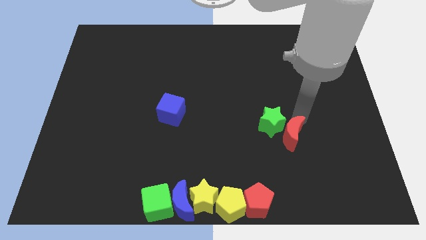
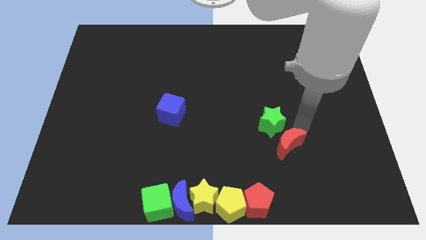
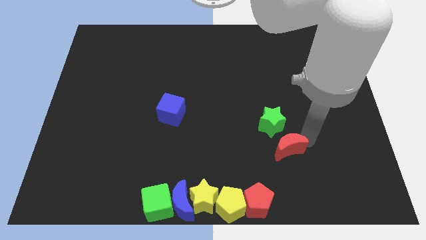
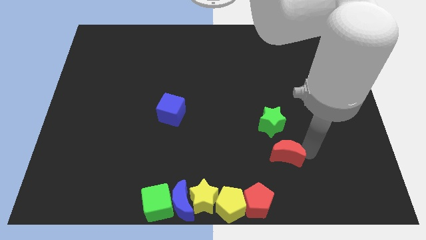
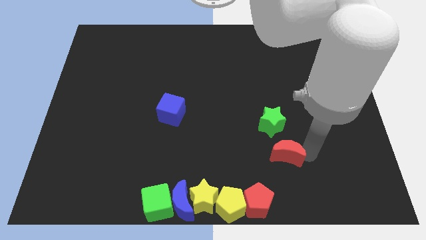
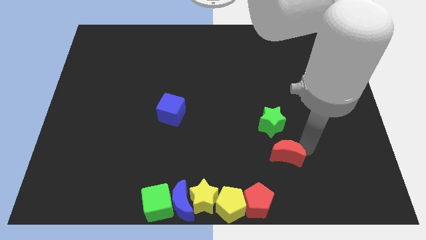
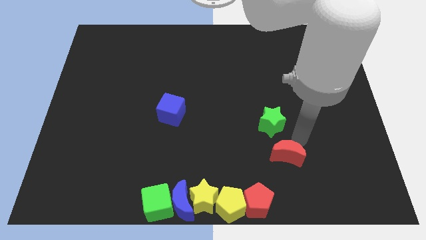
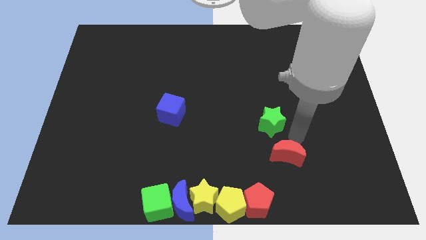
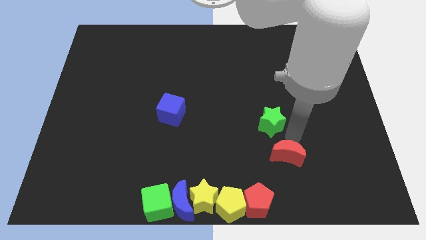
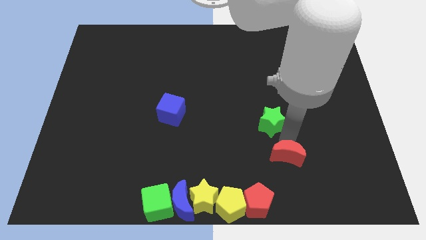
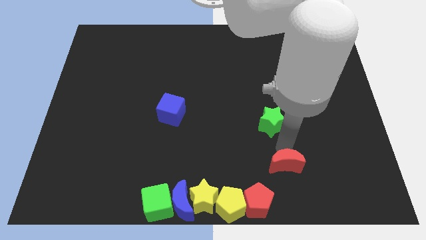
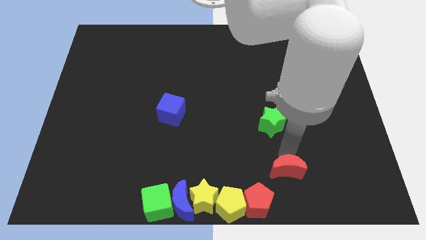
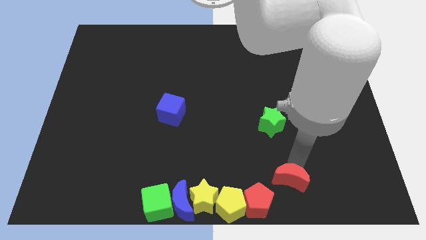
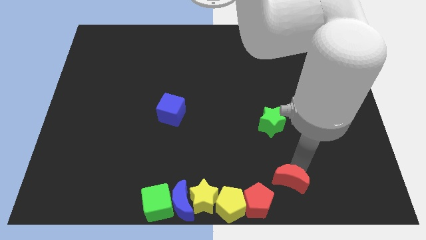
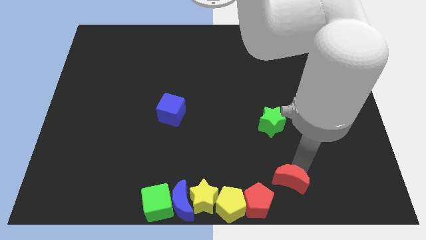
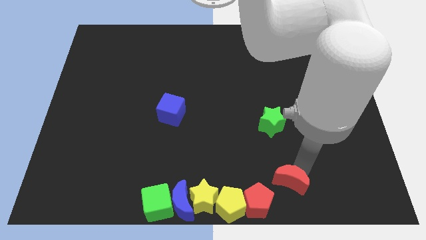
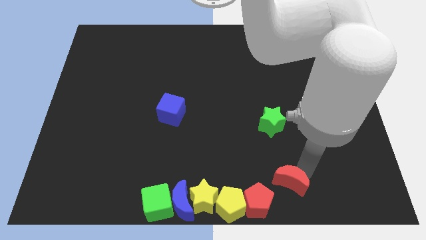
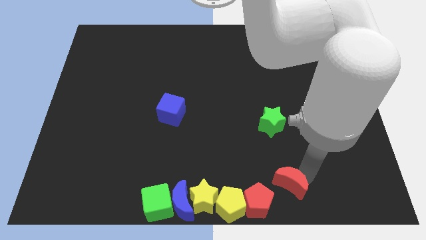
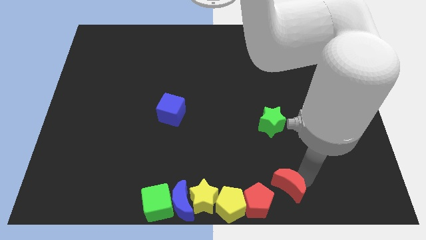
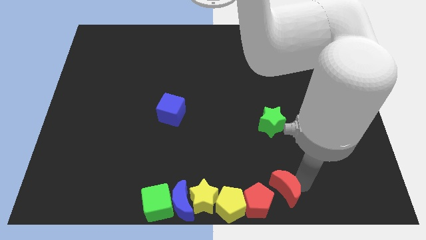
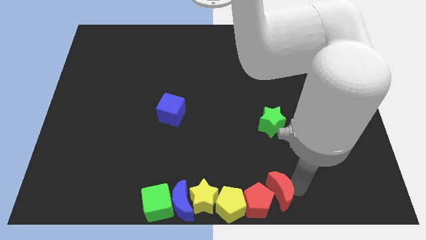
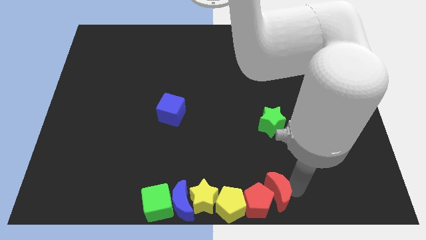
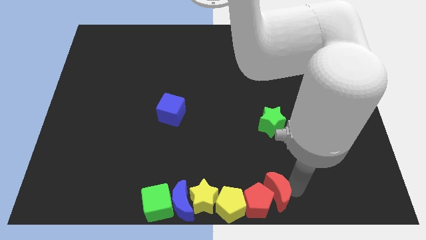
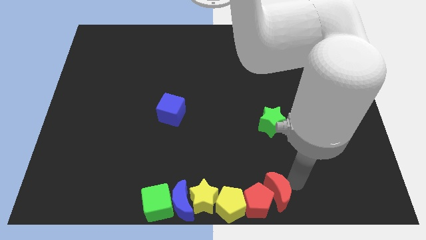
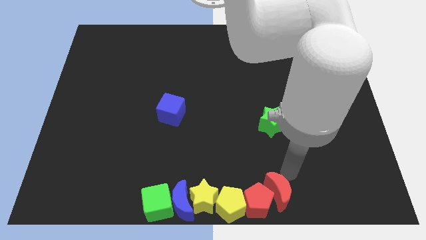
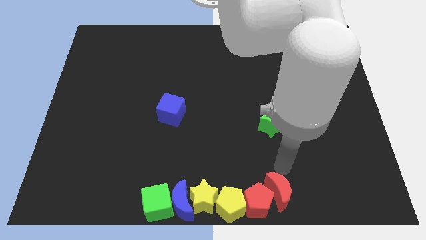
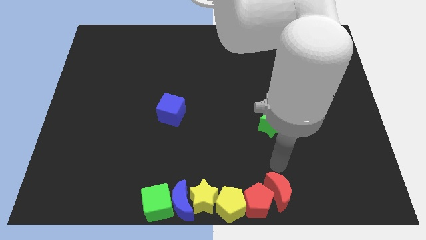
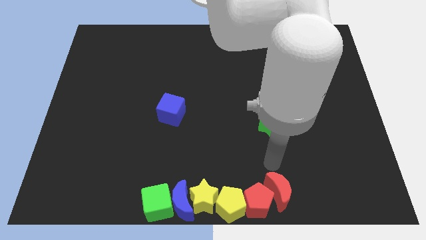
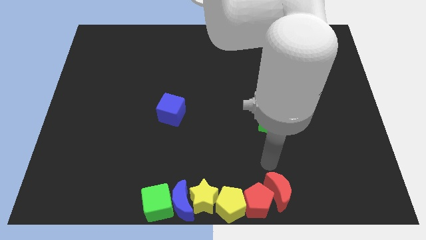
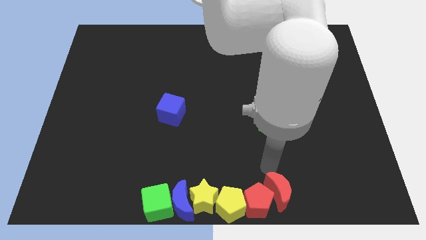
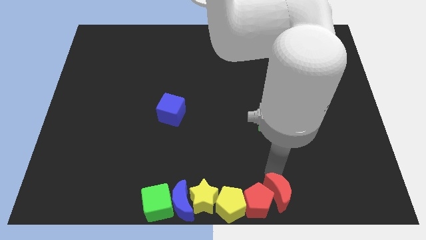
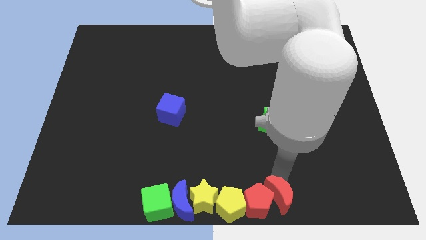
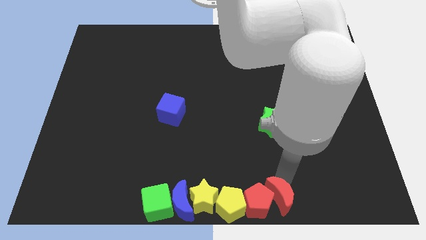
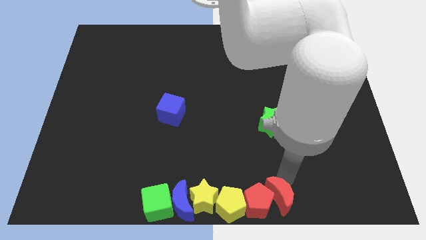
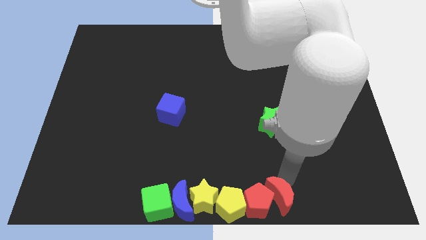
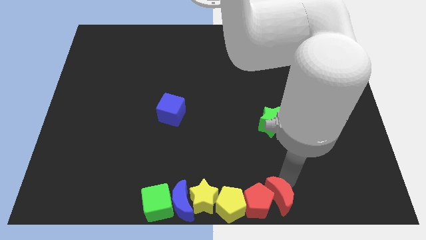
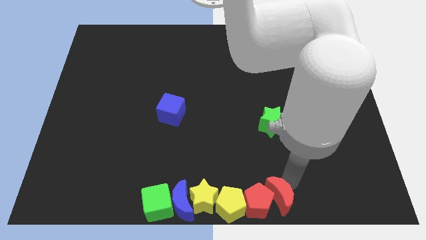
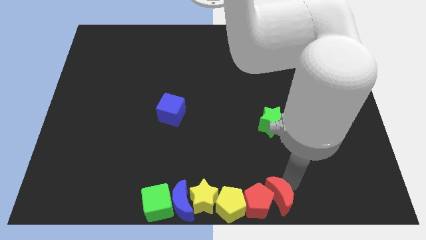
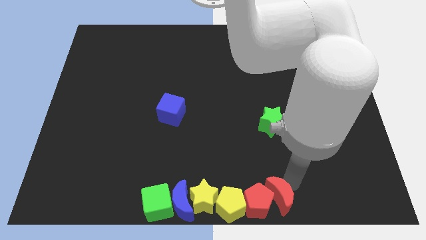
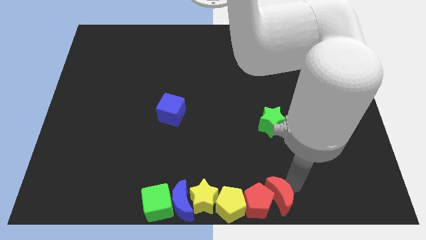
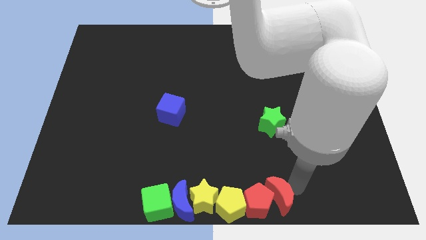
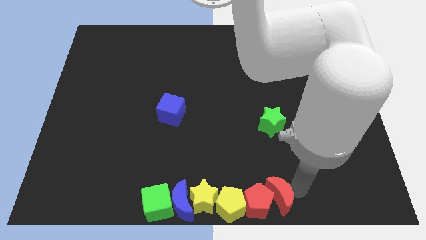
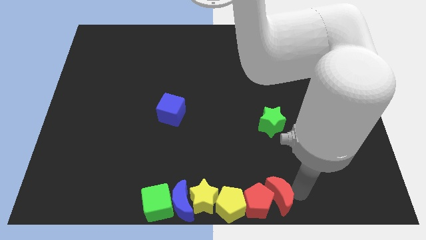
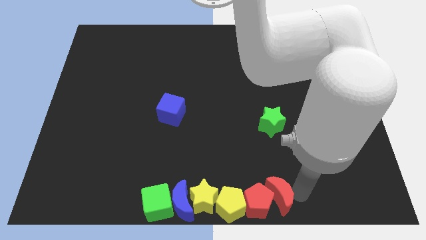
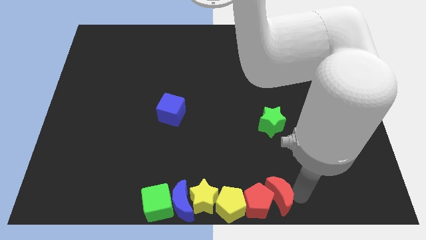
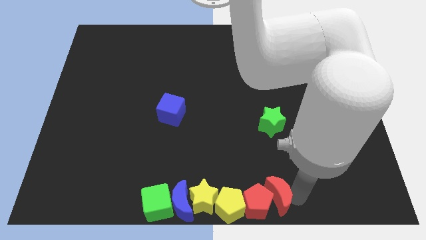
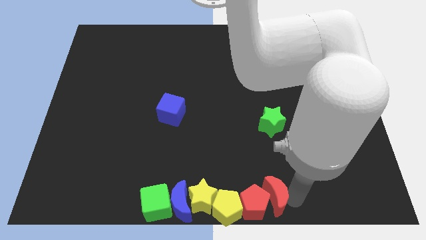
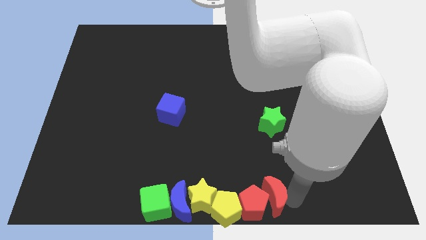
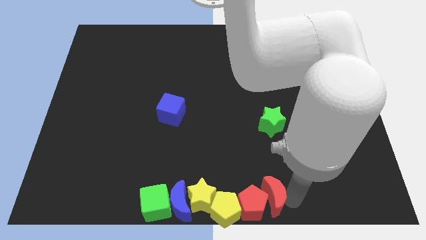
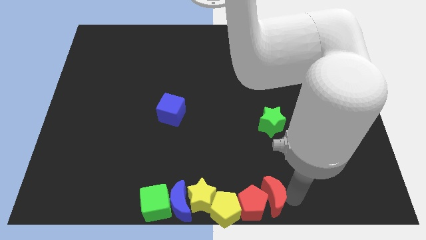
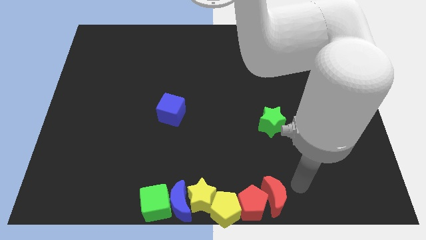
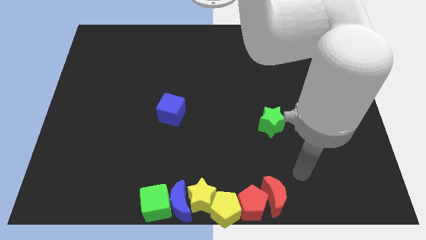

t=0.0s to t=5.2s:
move the red crescent into the red pentagon

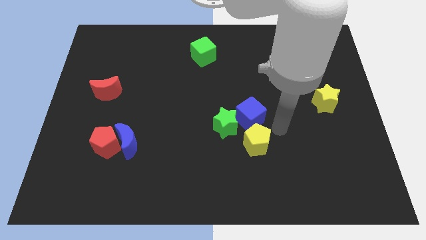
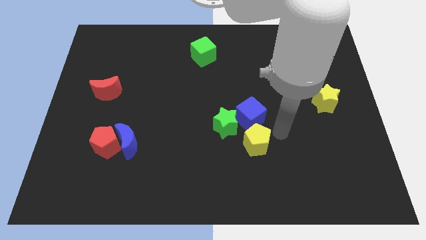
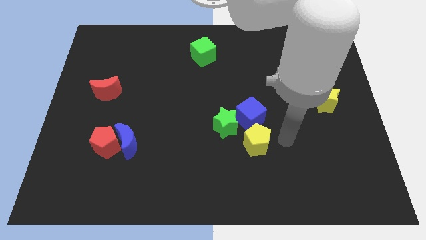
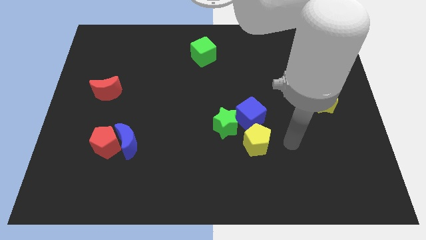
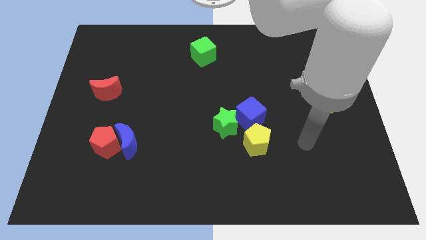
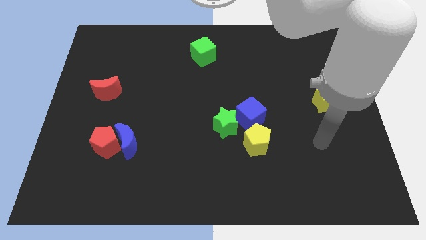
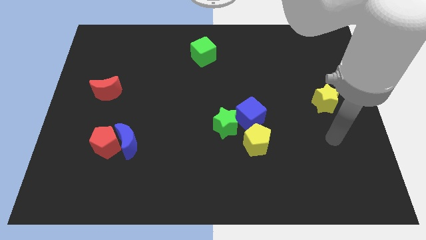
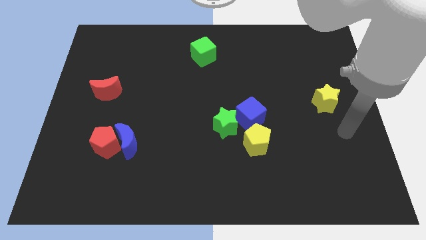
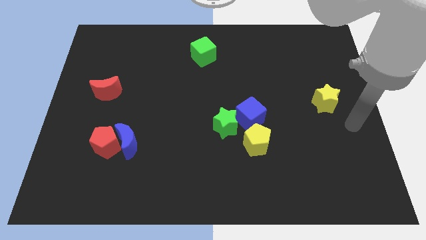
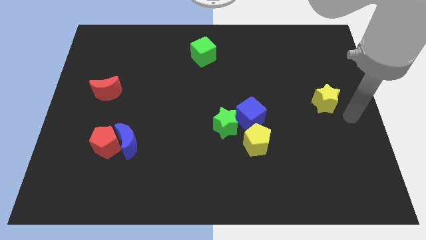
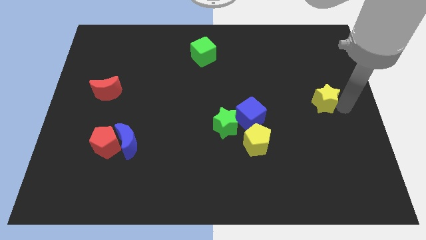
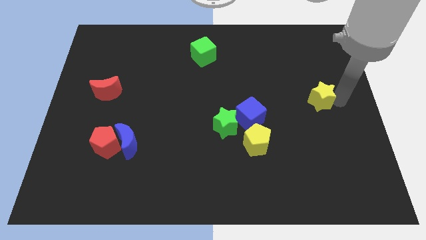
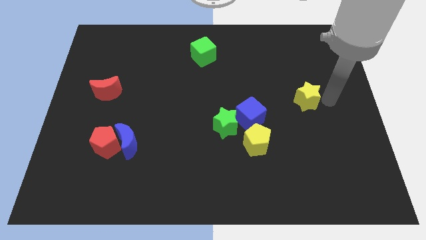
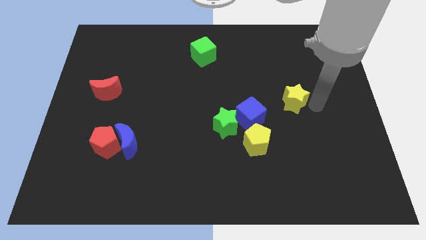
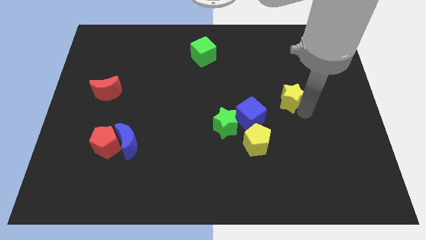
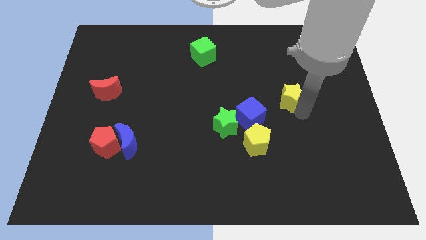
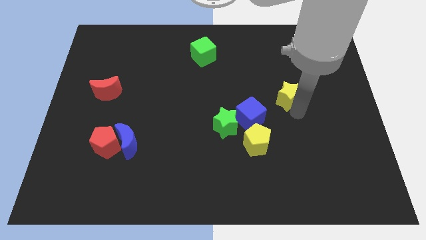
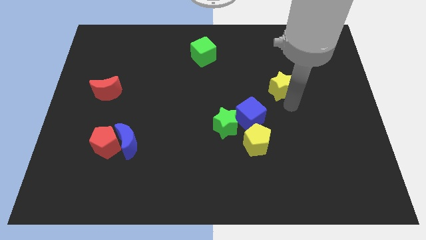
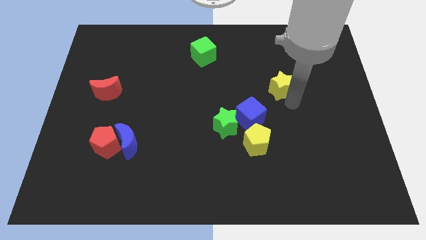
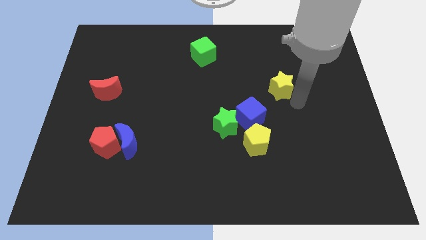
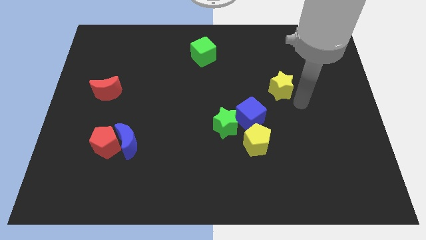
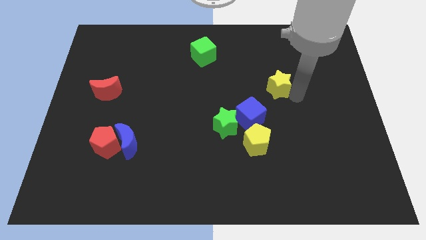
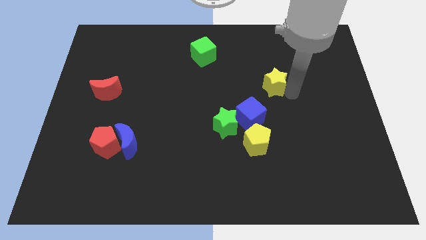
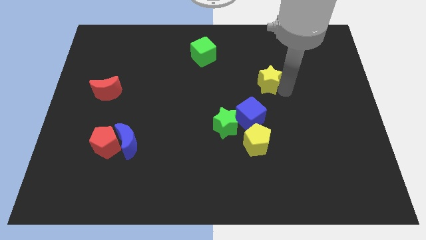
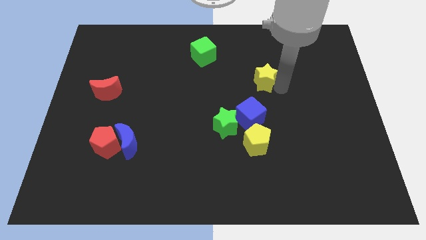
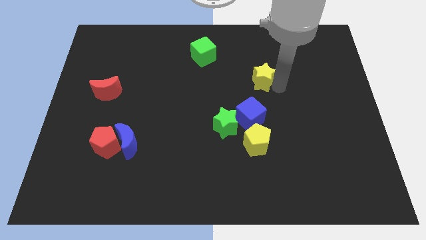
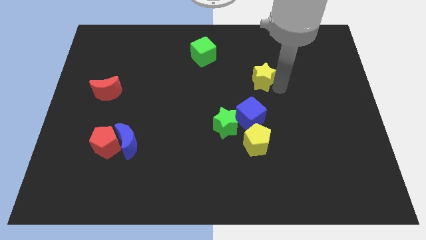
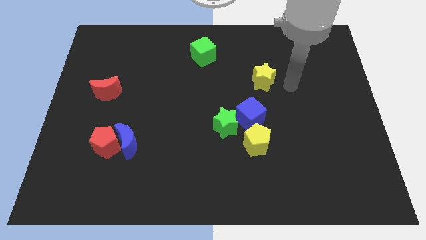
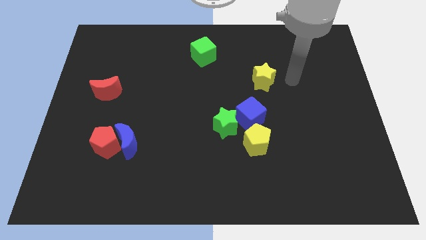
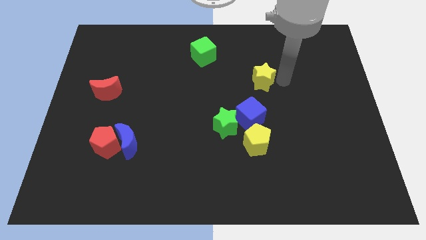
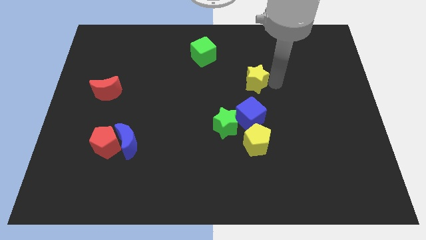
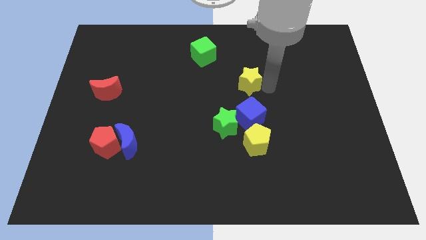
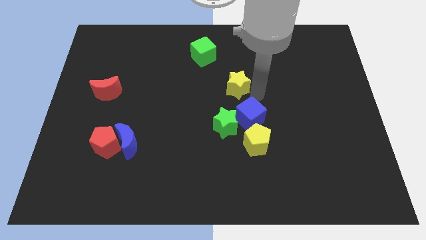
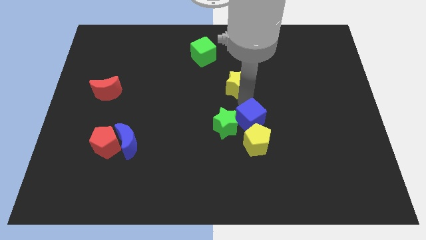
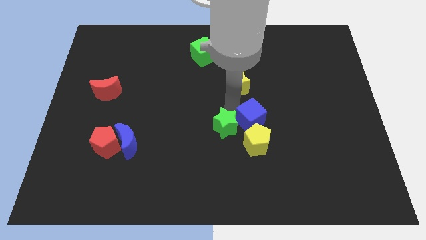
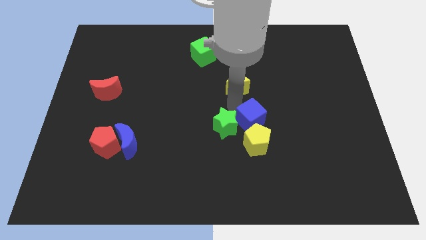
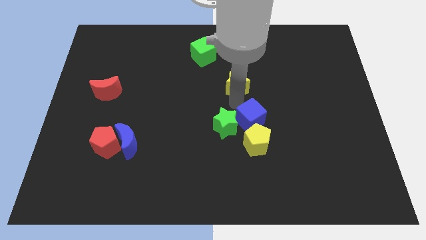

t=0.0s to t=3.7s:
place the yellow star beside the green cube to form a line
